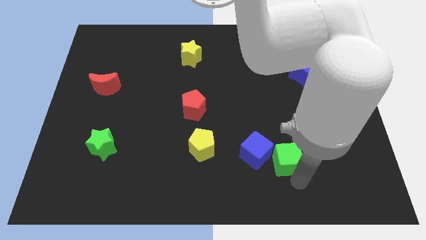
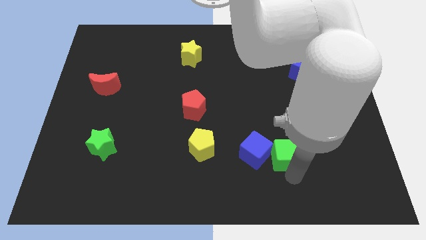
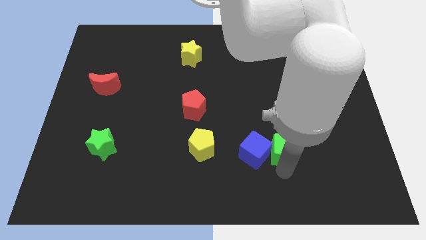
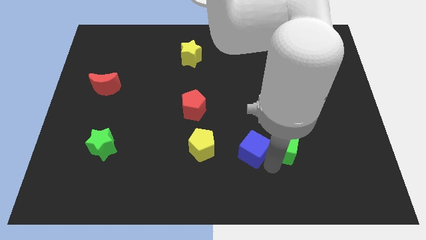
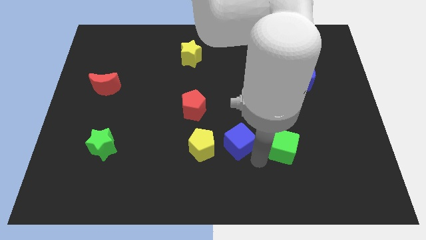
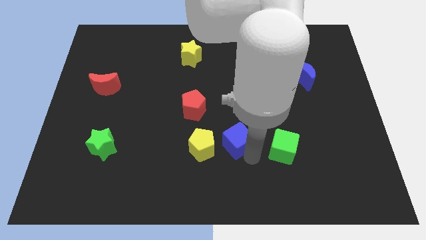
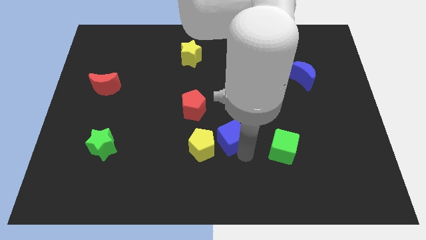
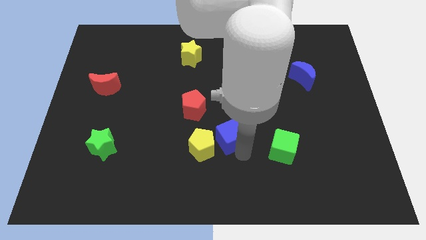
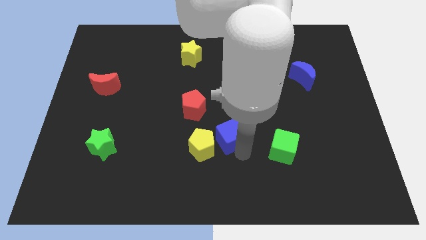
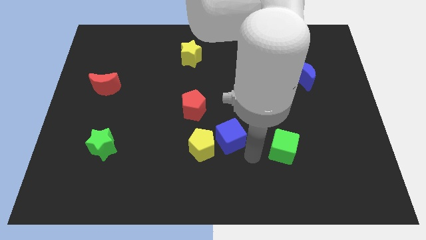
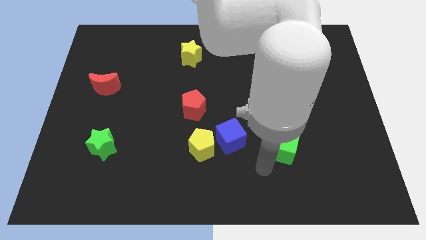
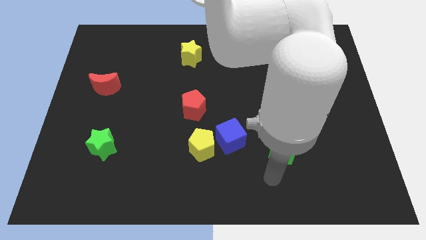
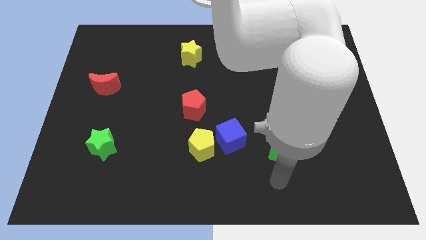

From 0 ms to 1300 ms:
separate blue cube from green cube

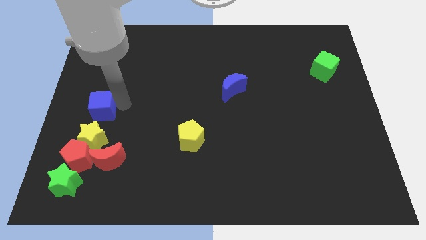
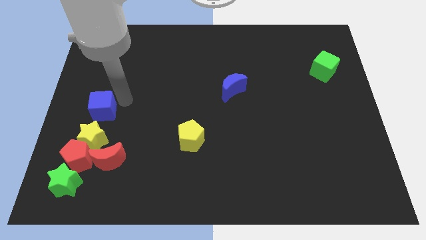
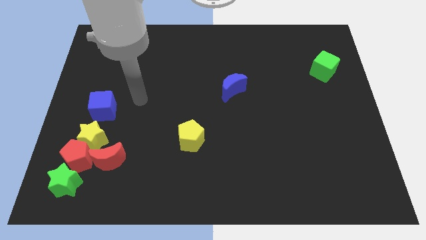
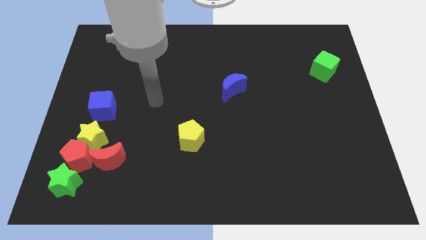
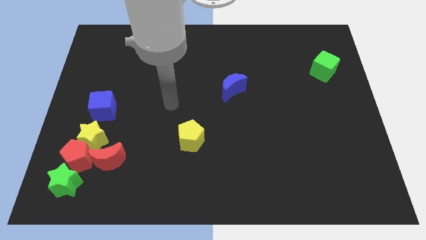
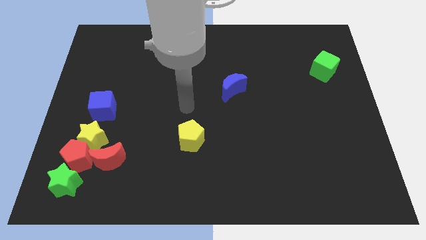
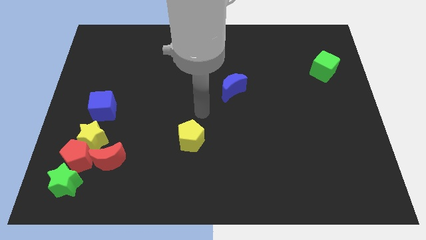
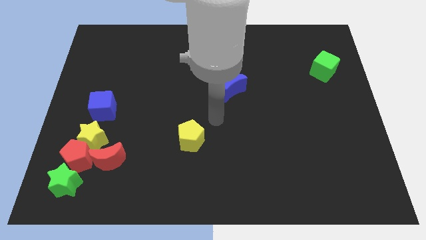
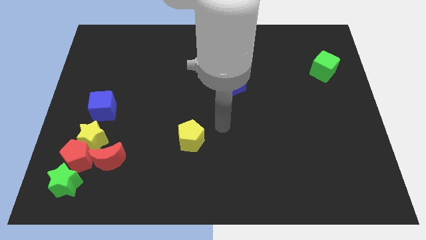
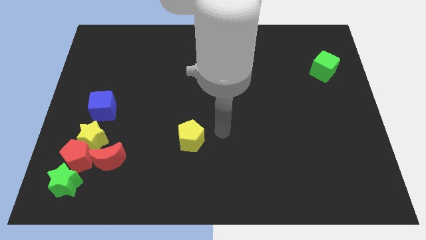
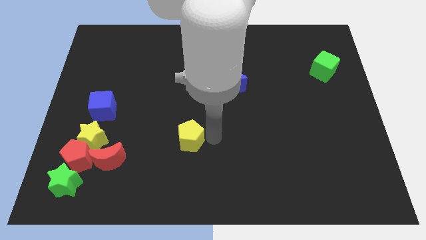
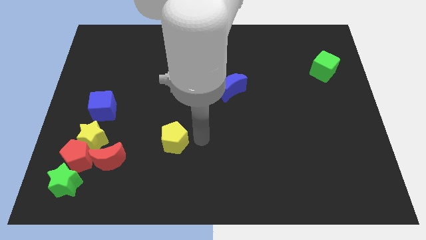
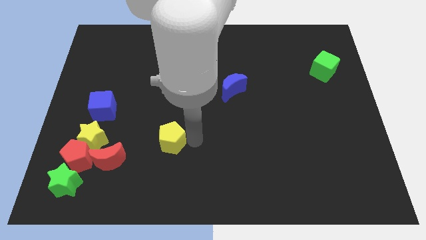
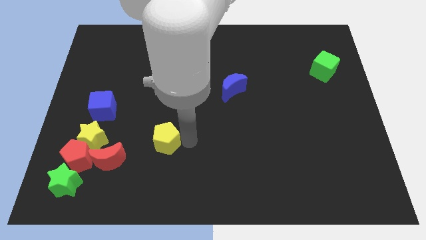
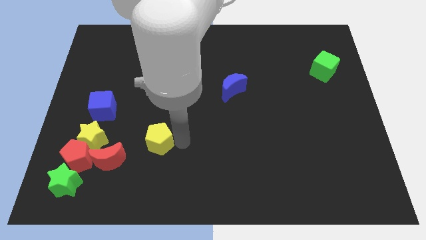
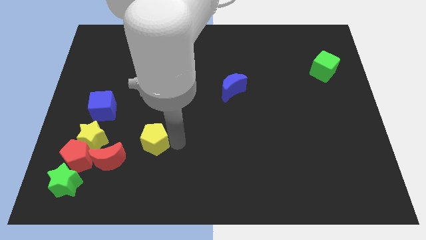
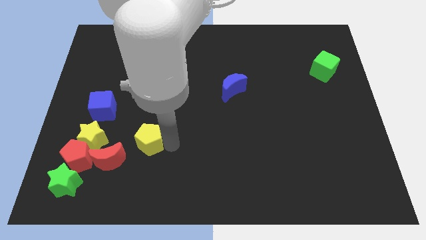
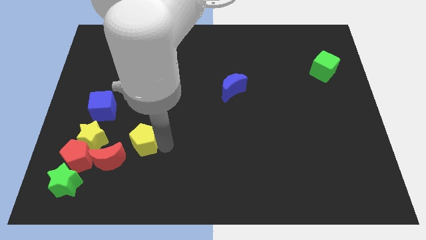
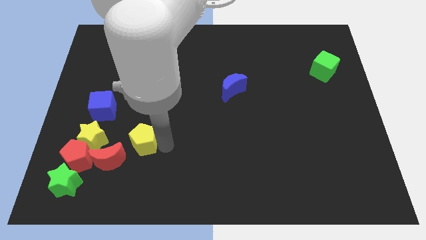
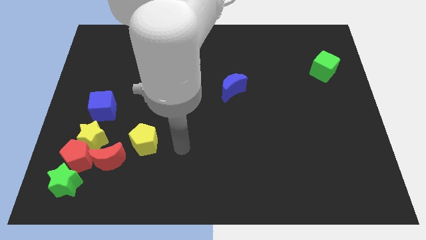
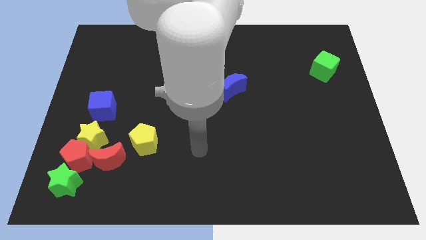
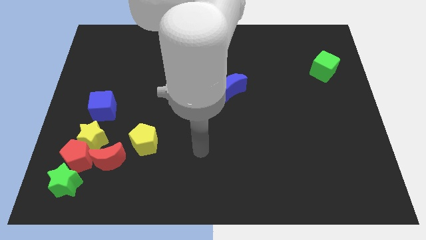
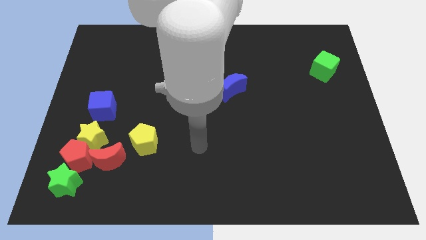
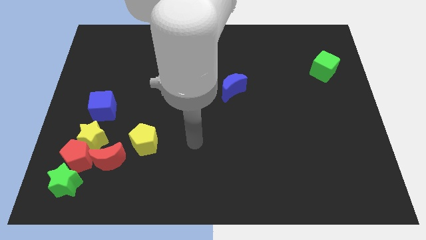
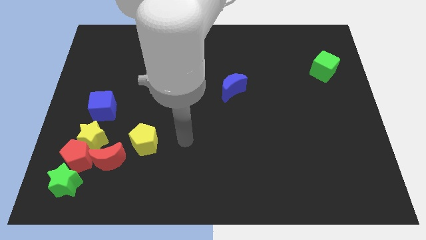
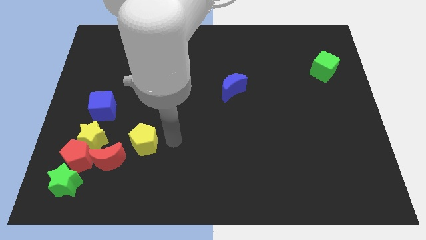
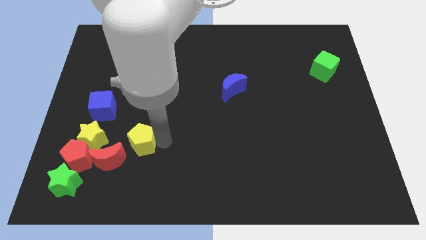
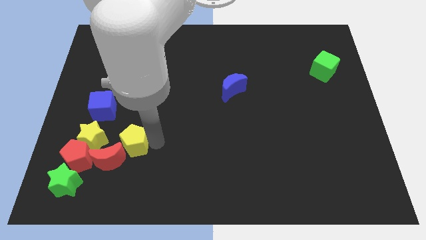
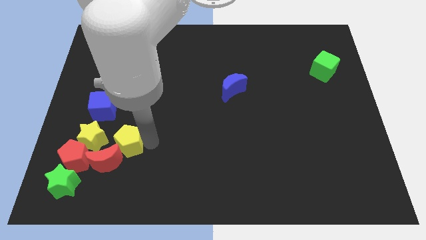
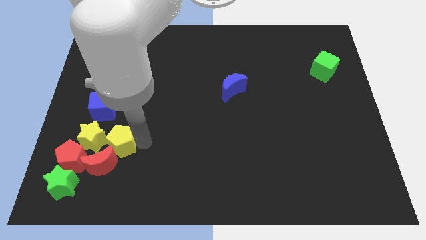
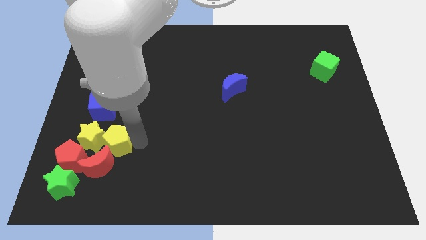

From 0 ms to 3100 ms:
move the yellow pentagon close to the yellow star

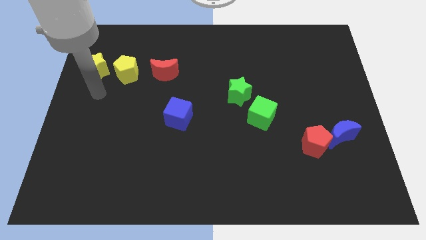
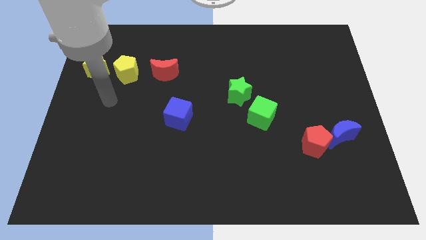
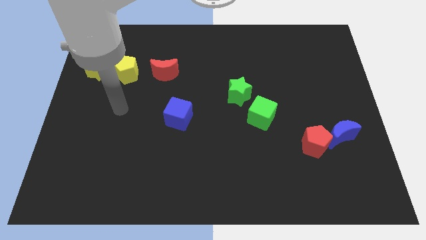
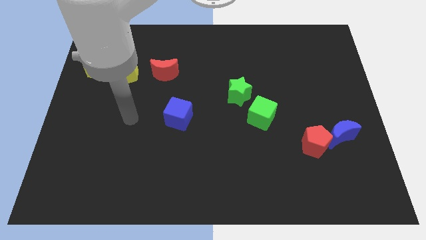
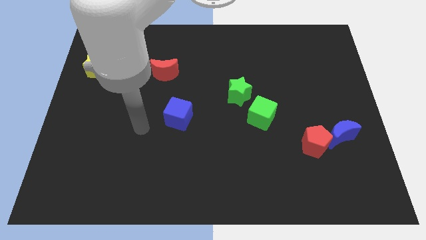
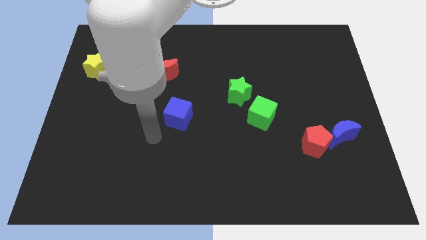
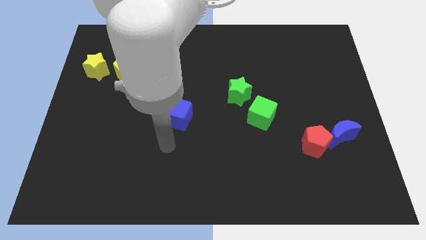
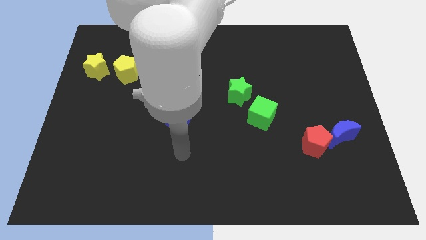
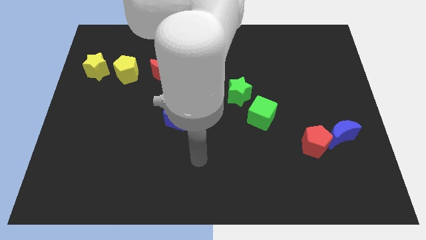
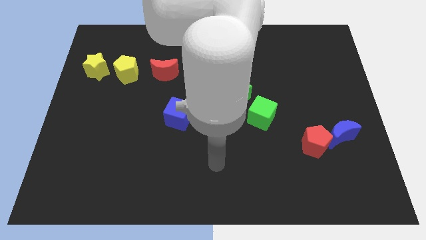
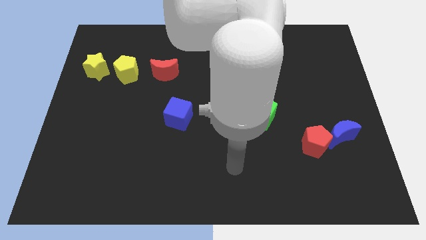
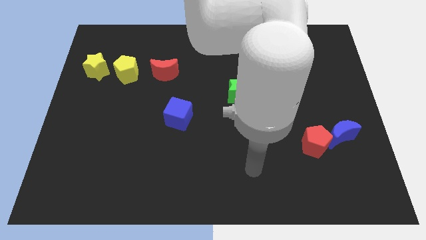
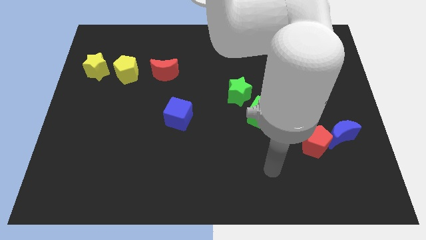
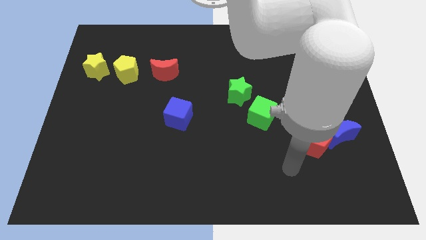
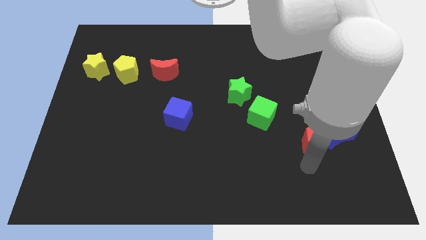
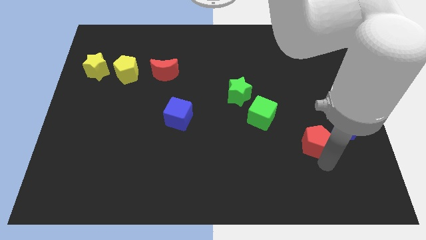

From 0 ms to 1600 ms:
move the arm from below the yellow star to below the red pentagon

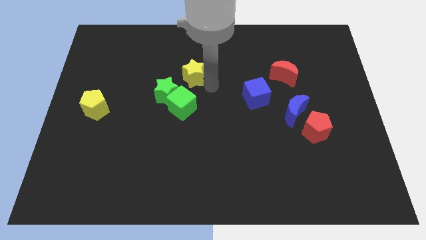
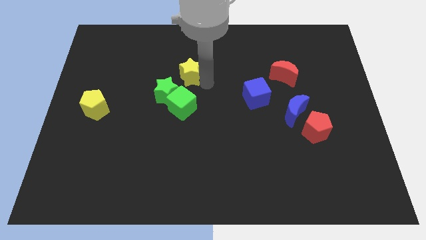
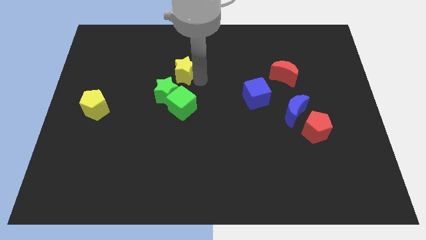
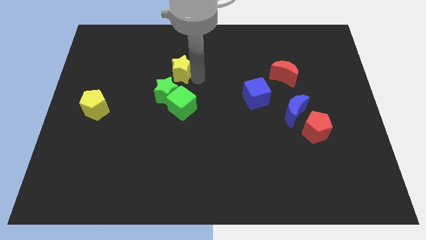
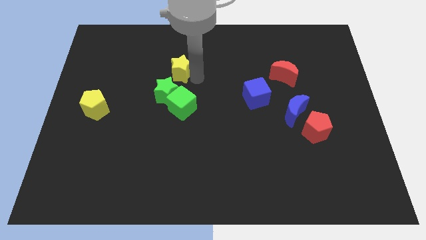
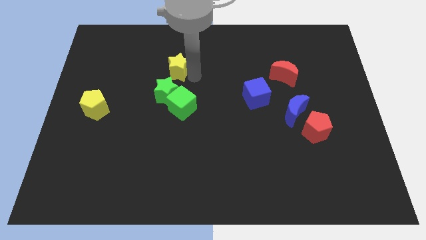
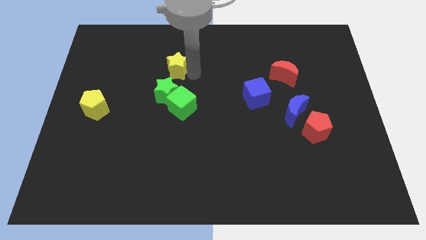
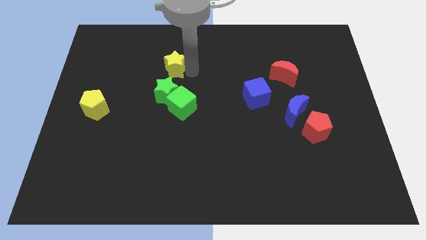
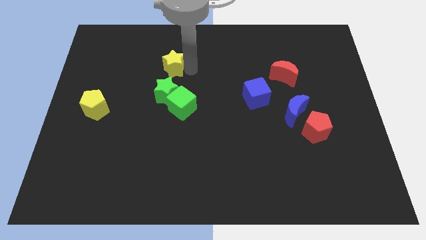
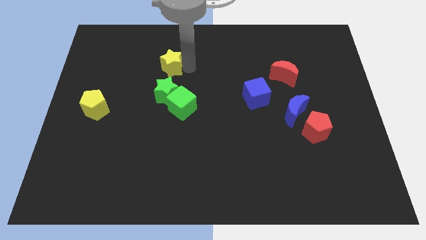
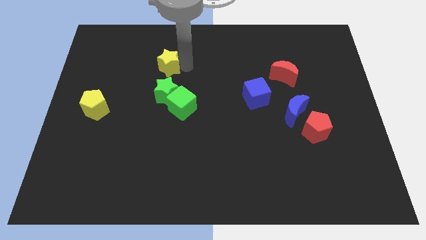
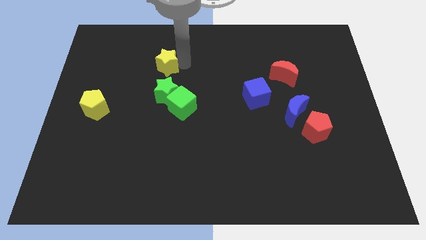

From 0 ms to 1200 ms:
move yellow star above green star

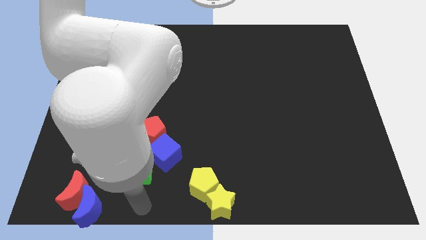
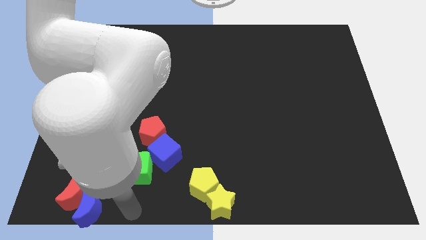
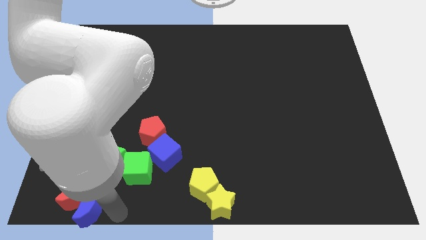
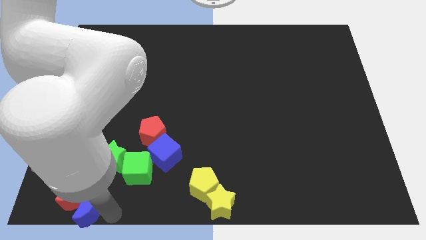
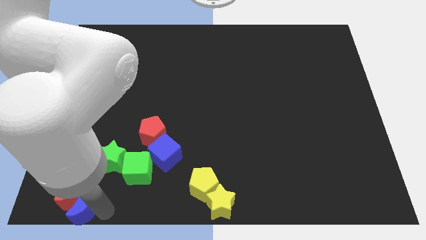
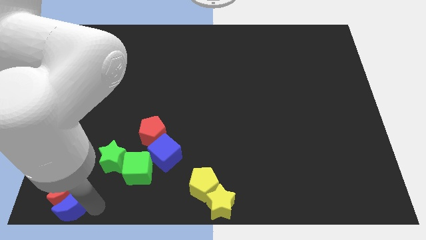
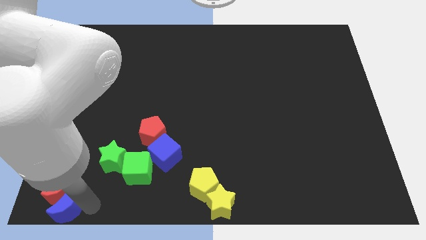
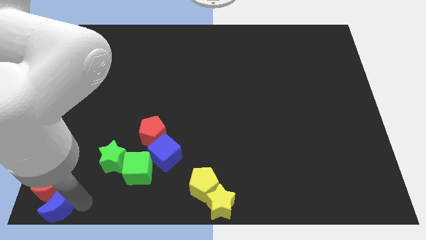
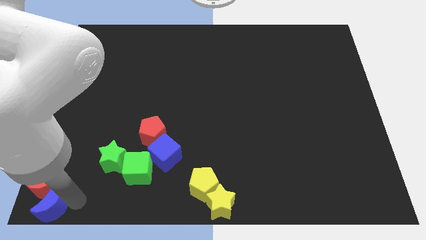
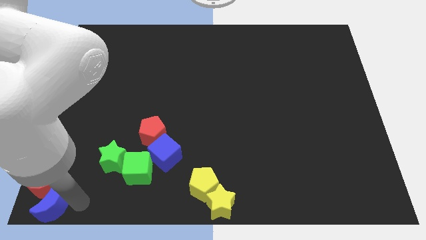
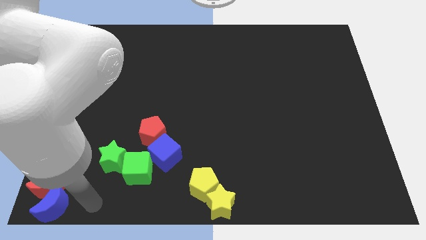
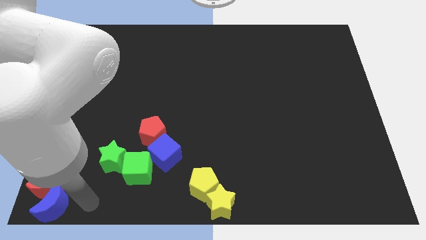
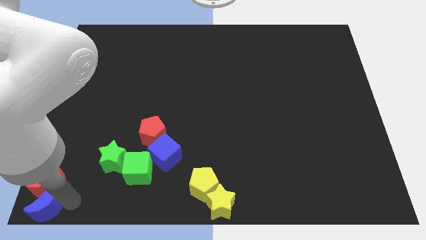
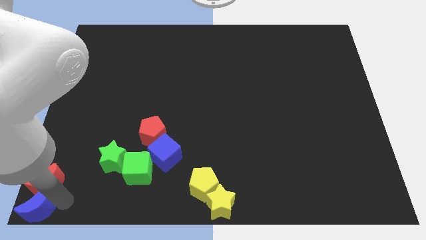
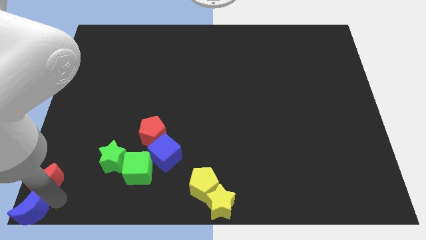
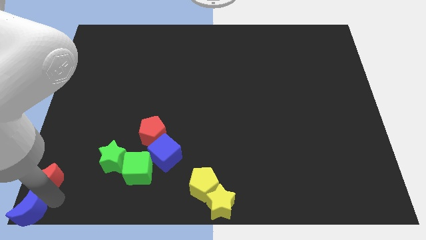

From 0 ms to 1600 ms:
move the blue crescent and red crescent to the left bottom corner of the board
